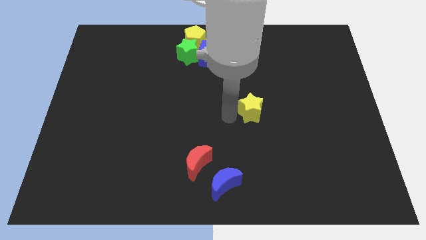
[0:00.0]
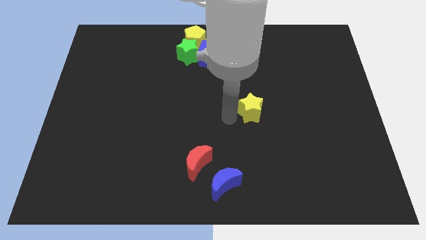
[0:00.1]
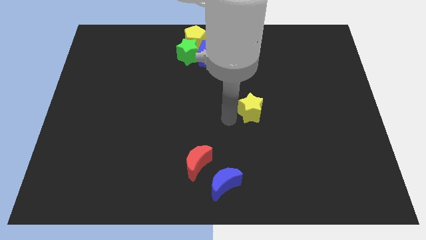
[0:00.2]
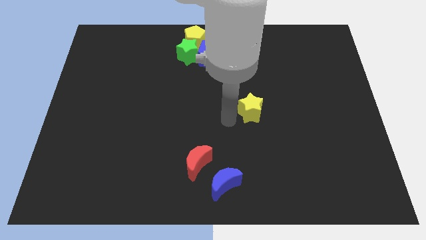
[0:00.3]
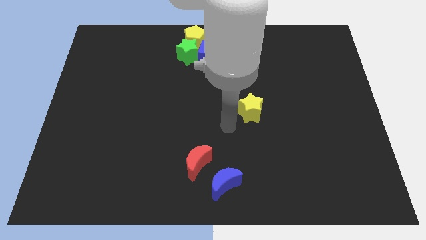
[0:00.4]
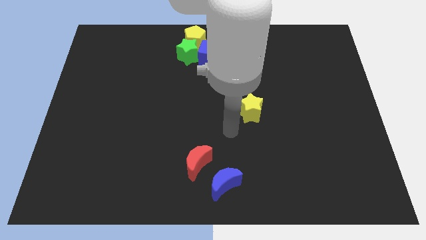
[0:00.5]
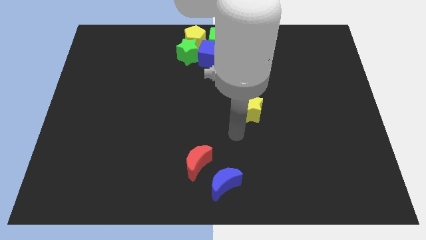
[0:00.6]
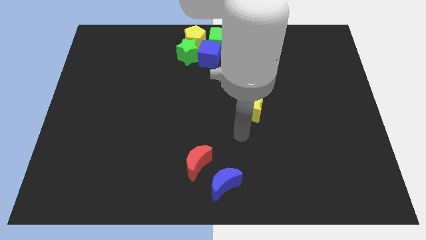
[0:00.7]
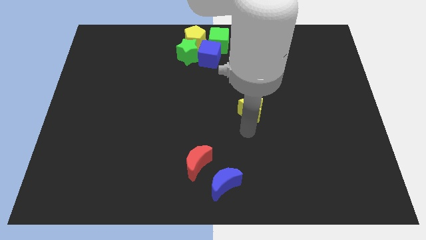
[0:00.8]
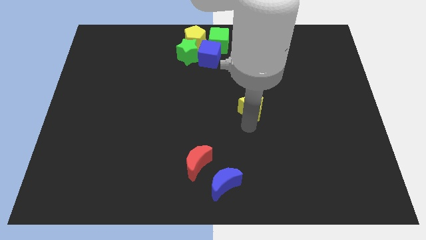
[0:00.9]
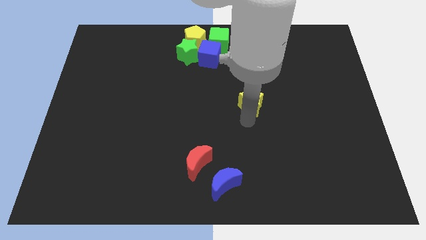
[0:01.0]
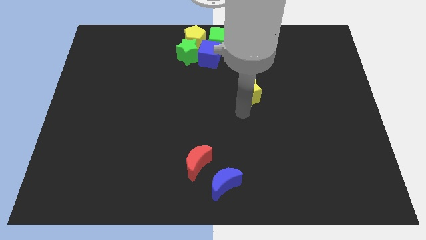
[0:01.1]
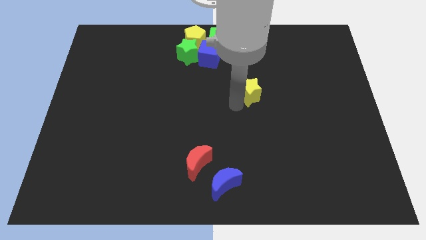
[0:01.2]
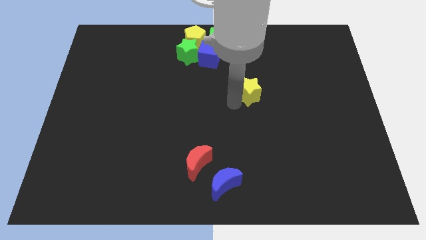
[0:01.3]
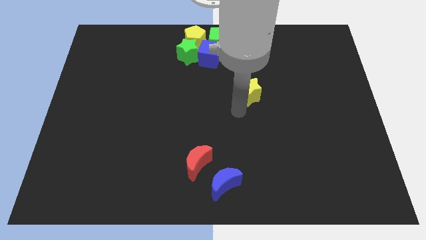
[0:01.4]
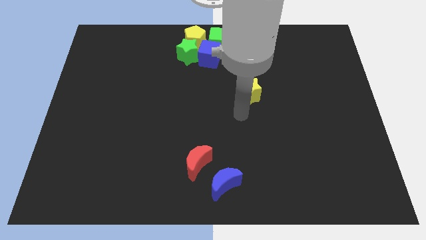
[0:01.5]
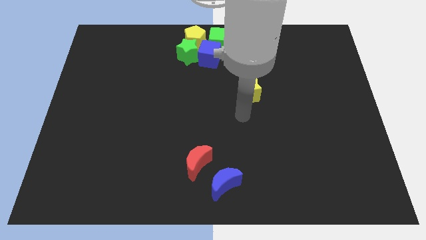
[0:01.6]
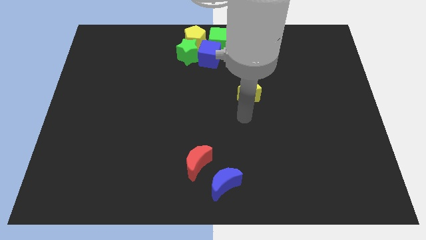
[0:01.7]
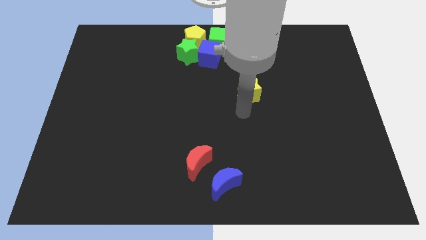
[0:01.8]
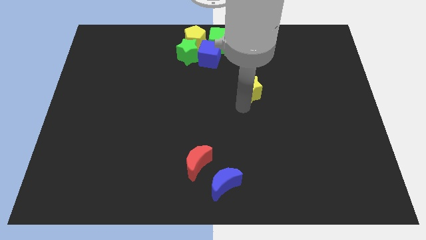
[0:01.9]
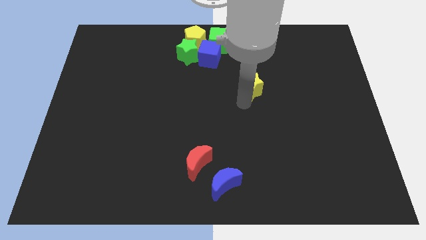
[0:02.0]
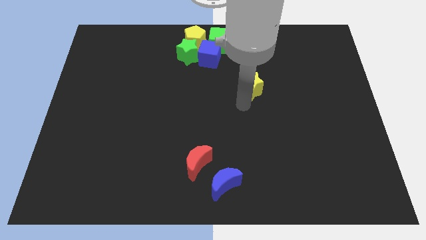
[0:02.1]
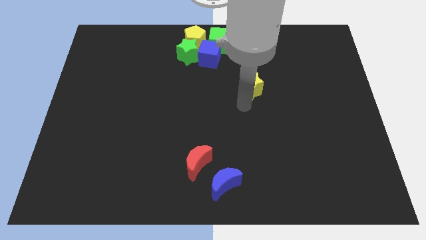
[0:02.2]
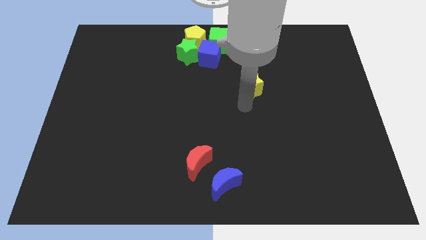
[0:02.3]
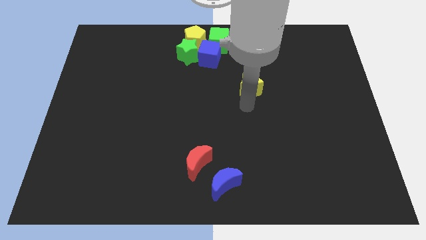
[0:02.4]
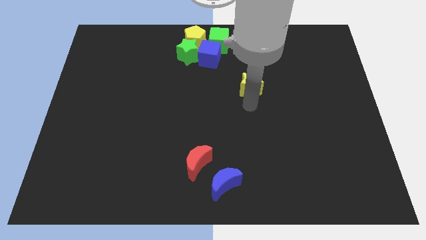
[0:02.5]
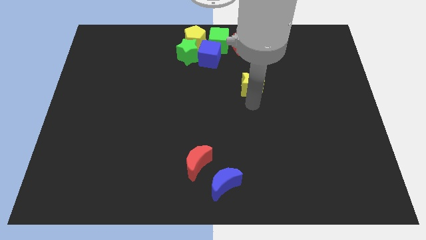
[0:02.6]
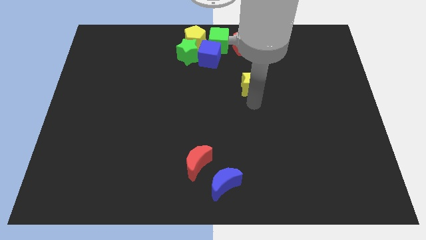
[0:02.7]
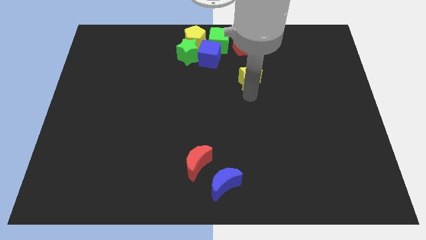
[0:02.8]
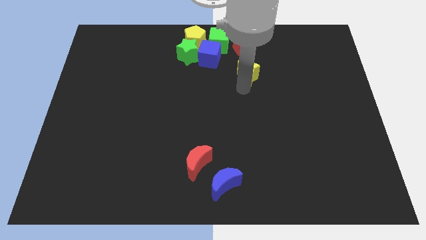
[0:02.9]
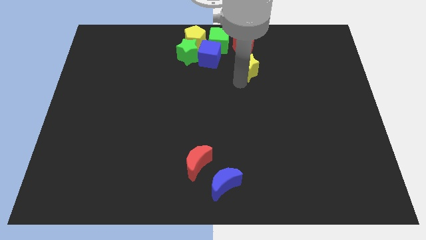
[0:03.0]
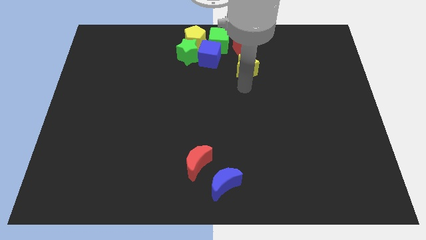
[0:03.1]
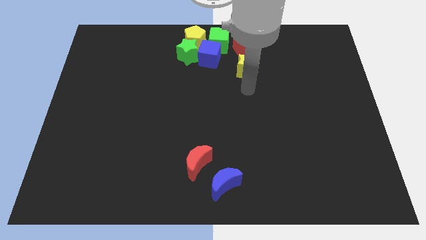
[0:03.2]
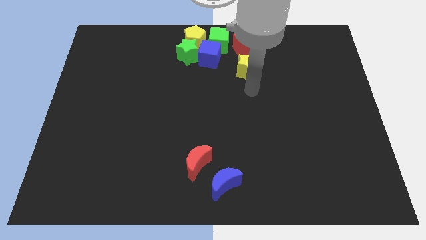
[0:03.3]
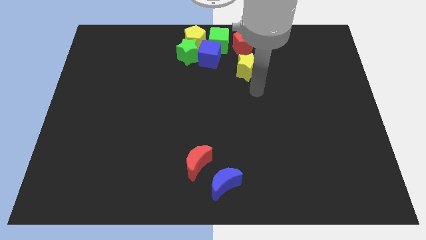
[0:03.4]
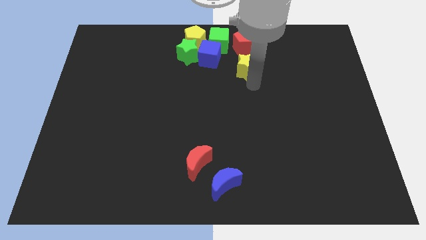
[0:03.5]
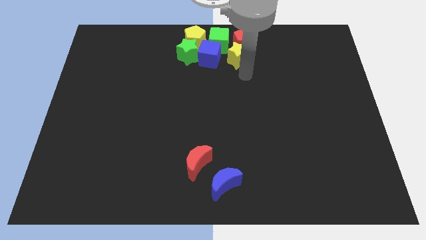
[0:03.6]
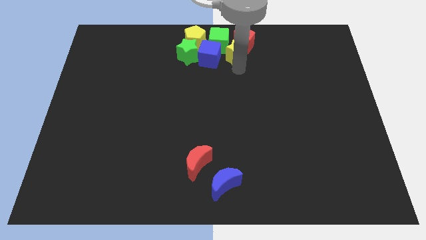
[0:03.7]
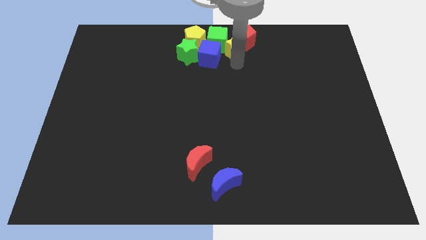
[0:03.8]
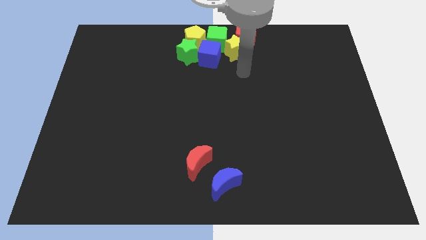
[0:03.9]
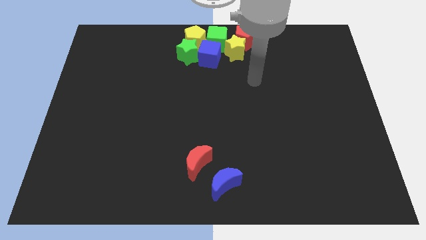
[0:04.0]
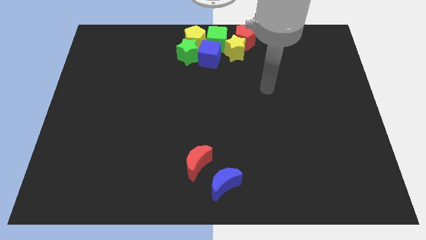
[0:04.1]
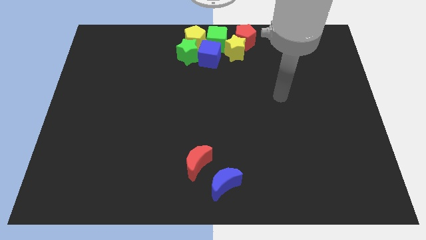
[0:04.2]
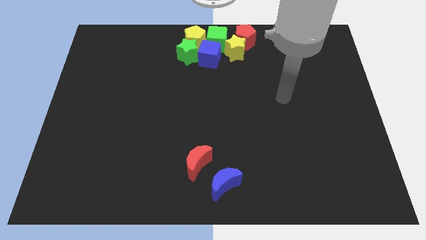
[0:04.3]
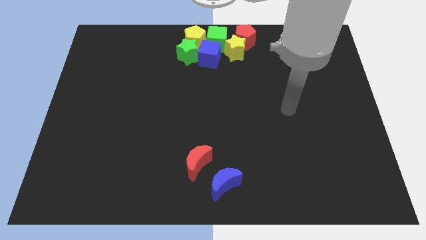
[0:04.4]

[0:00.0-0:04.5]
push the yellow star into the red pentagon and green cube

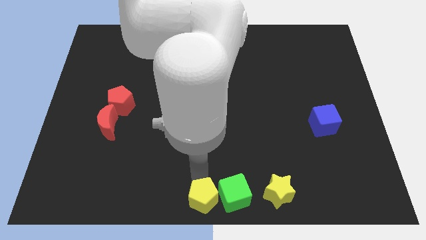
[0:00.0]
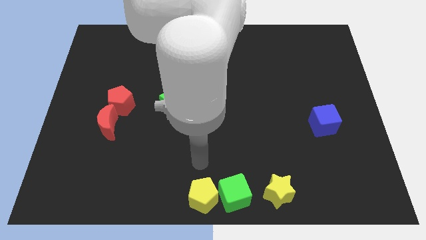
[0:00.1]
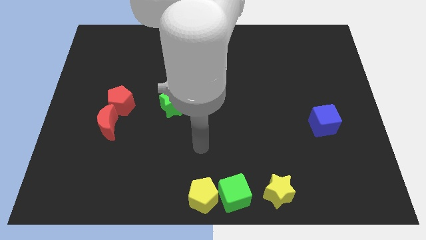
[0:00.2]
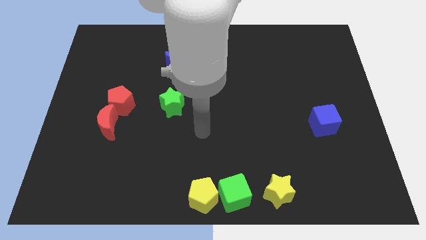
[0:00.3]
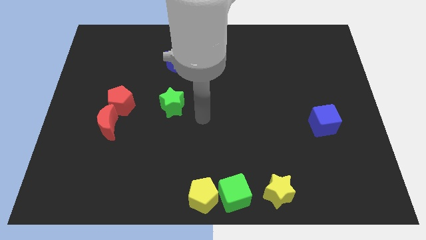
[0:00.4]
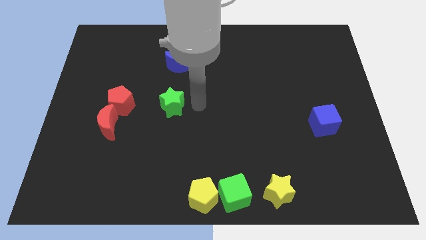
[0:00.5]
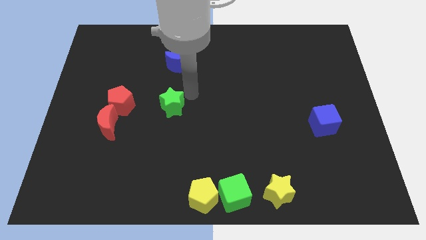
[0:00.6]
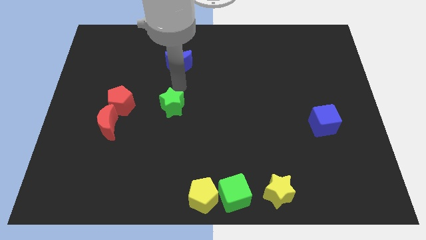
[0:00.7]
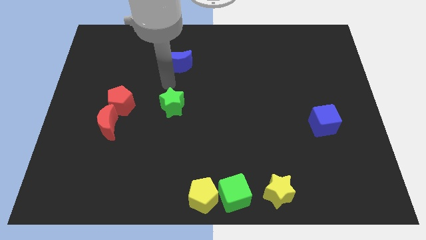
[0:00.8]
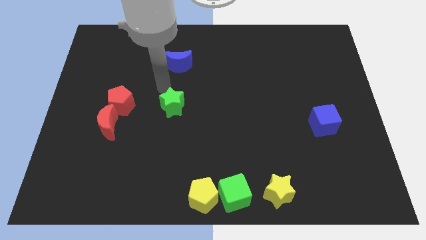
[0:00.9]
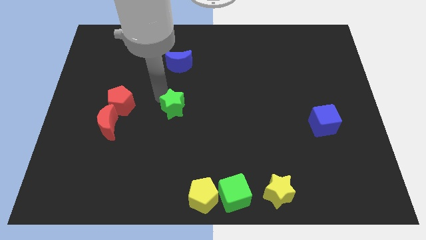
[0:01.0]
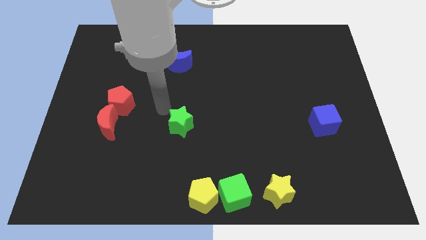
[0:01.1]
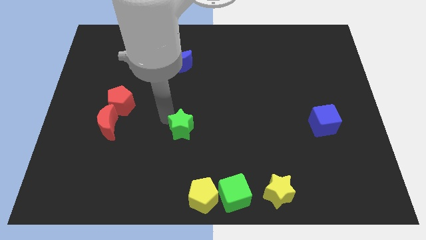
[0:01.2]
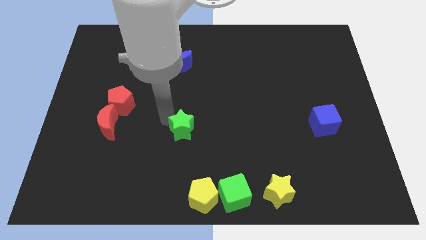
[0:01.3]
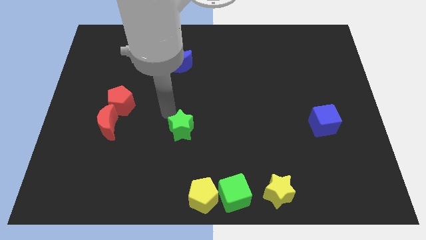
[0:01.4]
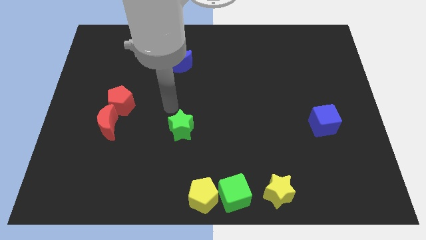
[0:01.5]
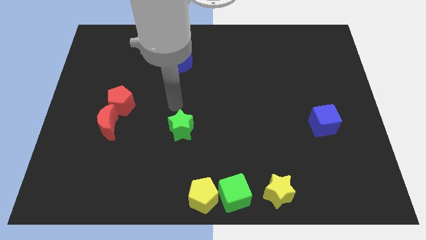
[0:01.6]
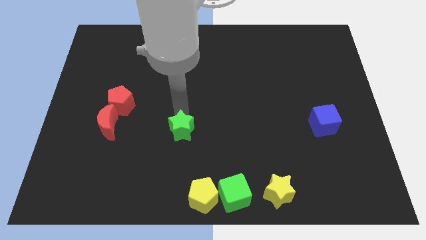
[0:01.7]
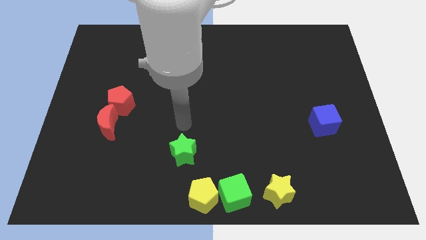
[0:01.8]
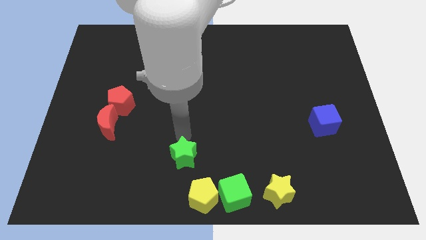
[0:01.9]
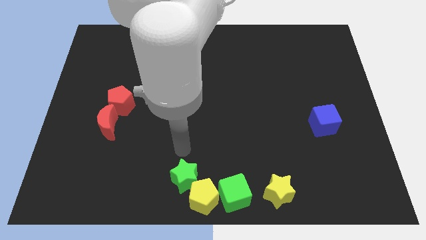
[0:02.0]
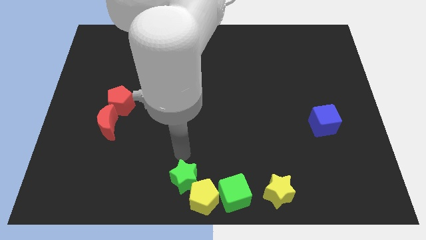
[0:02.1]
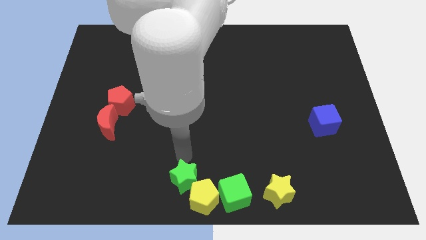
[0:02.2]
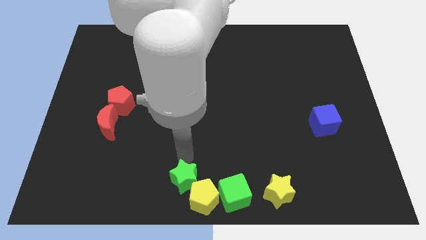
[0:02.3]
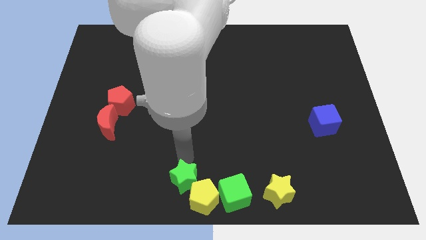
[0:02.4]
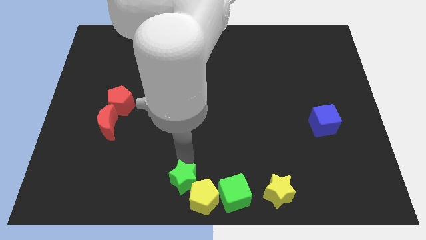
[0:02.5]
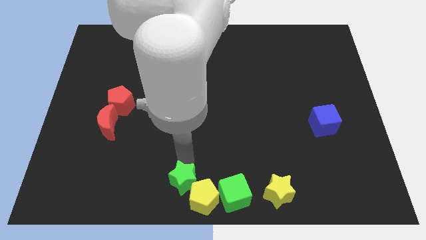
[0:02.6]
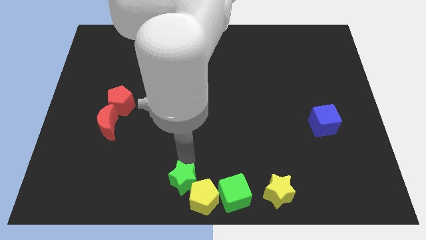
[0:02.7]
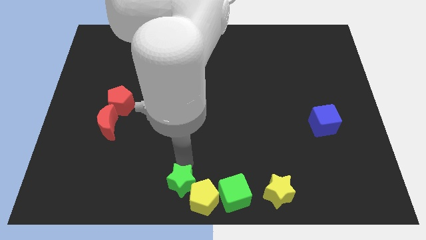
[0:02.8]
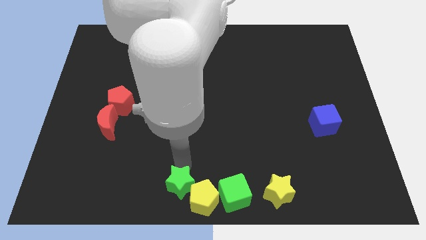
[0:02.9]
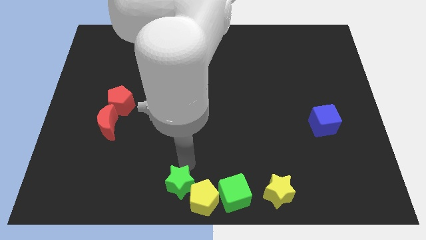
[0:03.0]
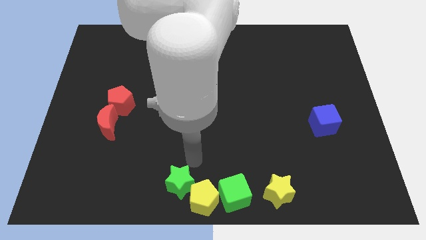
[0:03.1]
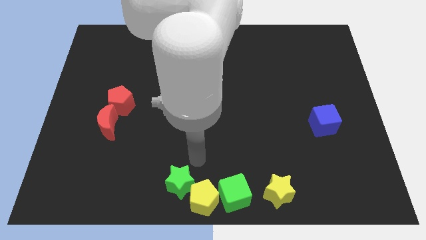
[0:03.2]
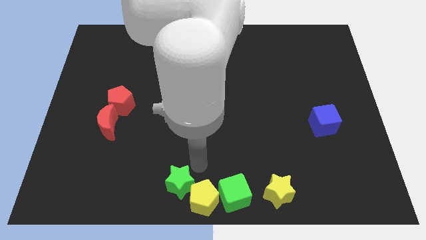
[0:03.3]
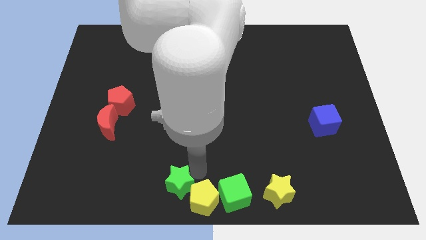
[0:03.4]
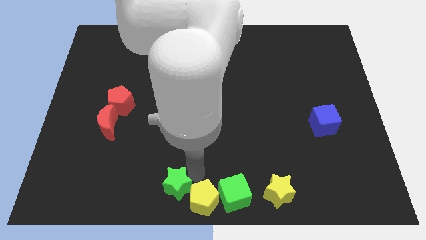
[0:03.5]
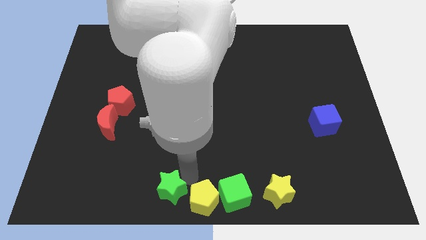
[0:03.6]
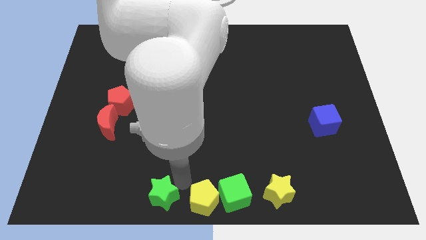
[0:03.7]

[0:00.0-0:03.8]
push the green star left to the yellow pentagon

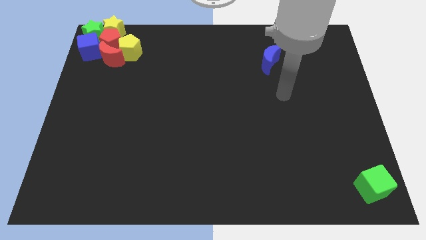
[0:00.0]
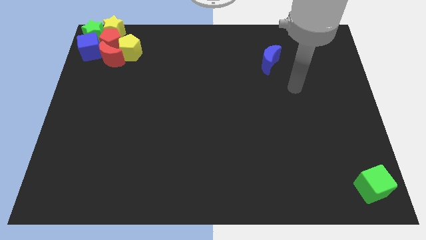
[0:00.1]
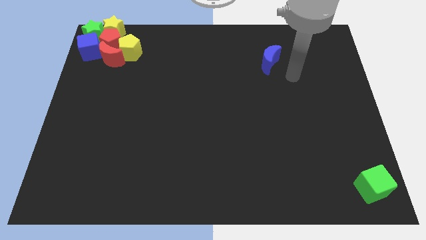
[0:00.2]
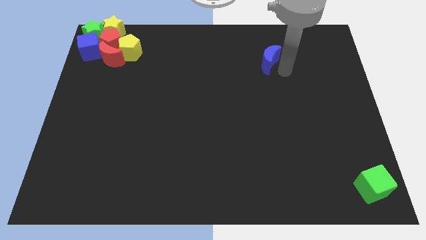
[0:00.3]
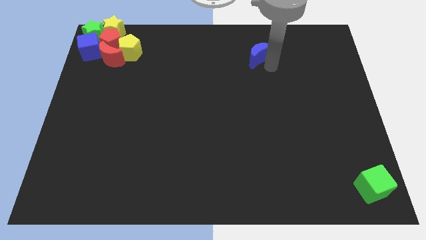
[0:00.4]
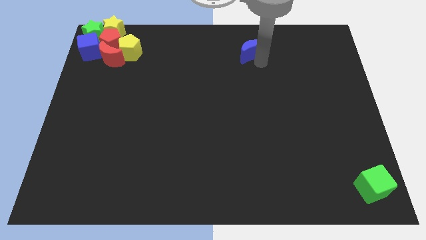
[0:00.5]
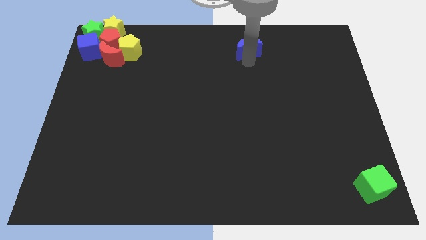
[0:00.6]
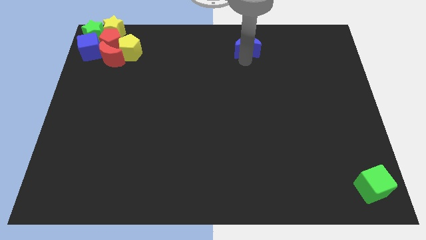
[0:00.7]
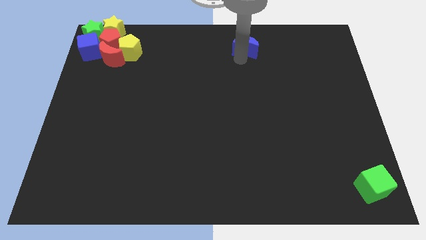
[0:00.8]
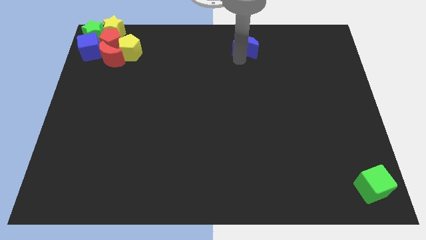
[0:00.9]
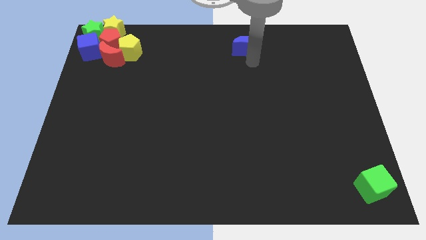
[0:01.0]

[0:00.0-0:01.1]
push the blue crescent slightly to the top
